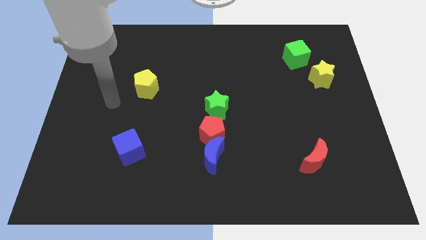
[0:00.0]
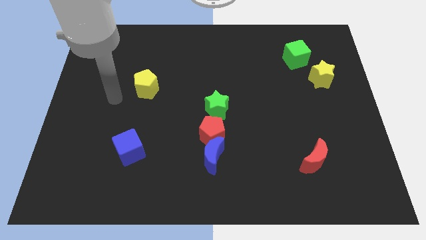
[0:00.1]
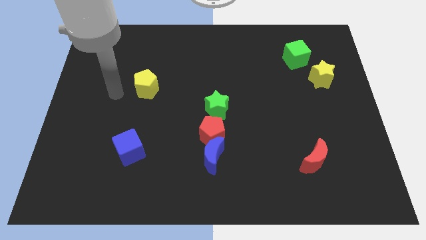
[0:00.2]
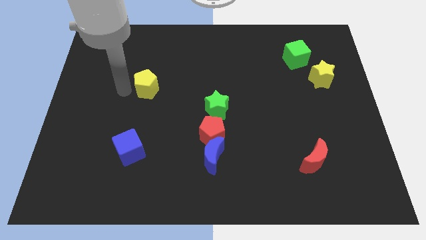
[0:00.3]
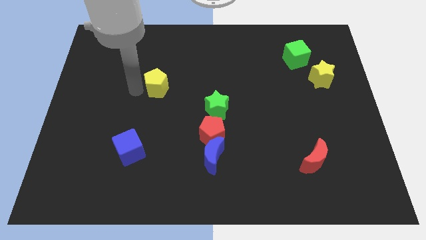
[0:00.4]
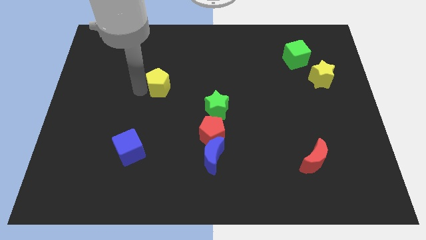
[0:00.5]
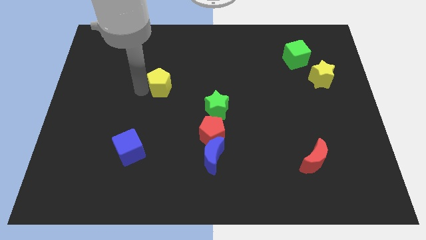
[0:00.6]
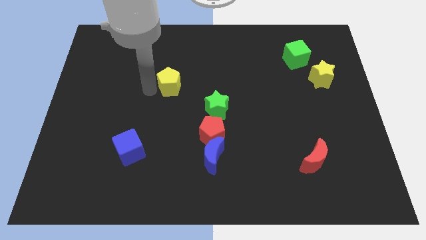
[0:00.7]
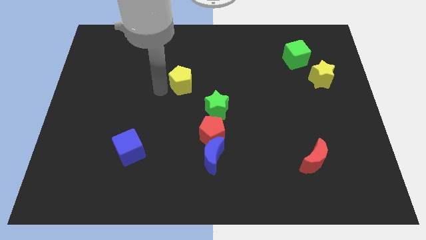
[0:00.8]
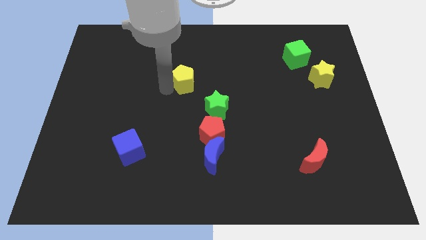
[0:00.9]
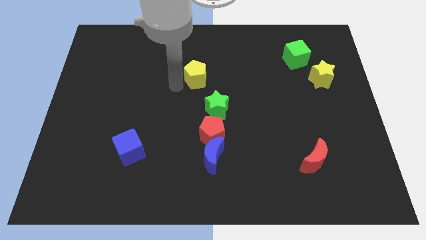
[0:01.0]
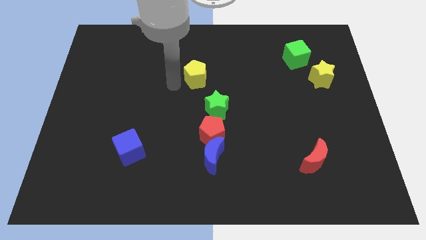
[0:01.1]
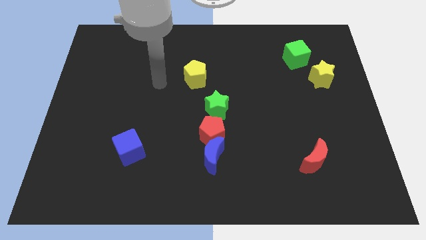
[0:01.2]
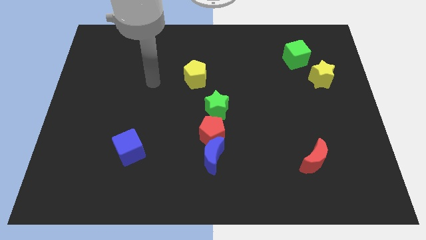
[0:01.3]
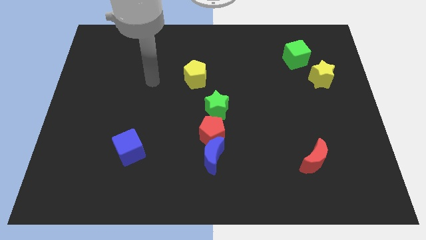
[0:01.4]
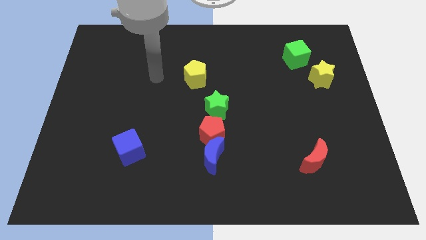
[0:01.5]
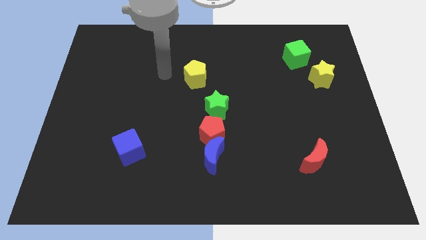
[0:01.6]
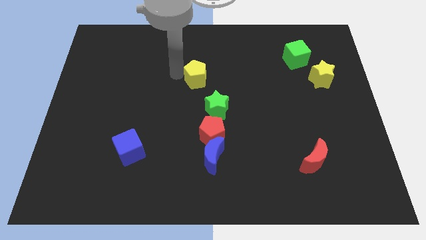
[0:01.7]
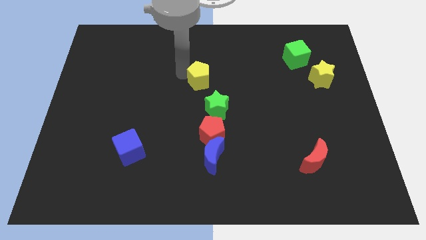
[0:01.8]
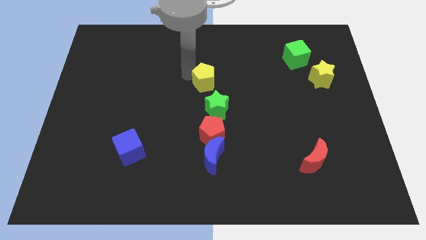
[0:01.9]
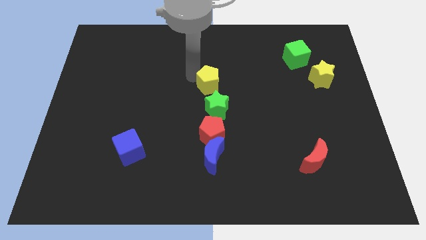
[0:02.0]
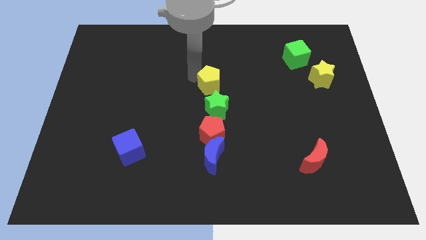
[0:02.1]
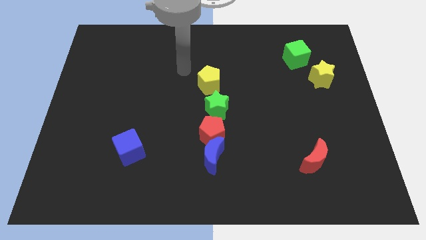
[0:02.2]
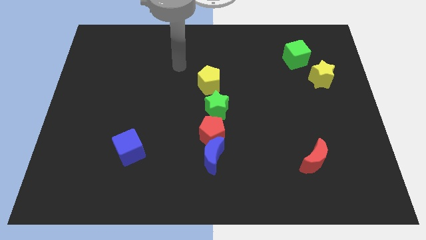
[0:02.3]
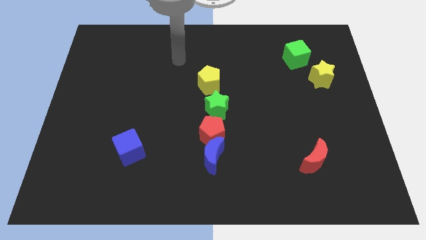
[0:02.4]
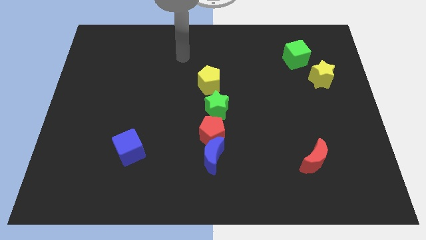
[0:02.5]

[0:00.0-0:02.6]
move the yellow pentagon to the top side of the green star

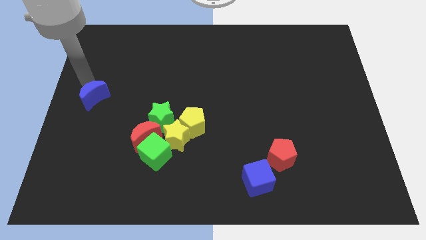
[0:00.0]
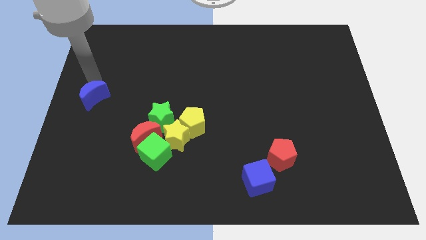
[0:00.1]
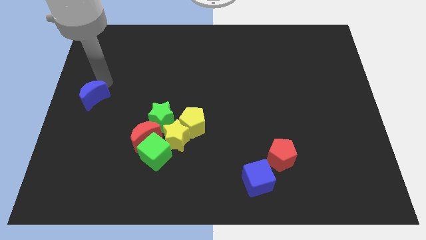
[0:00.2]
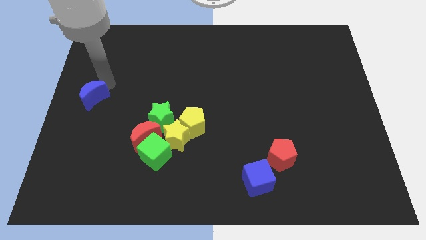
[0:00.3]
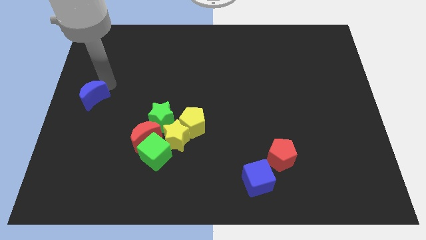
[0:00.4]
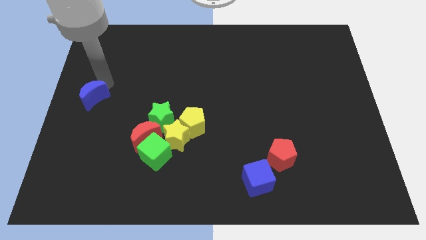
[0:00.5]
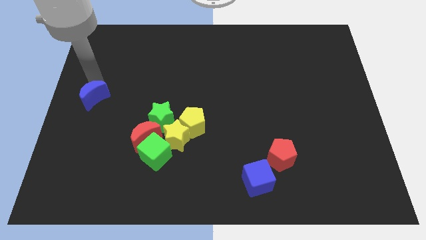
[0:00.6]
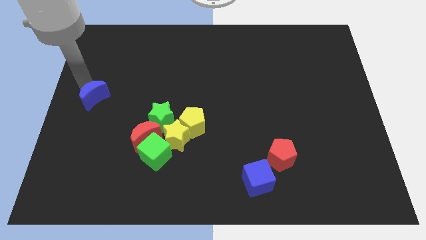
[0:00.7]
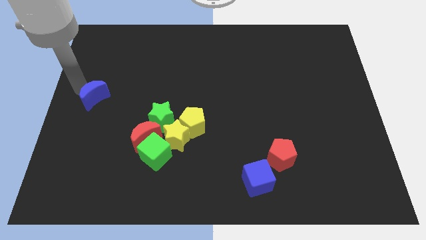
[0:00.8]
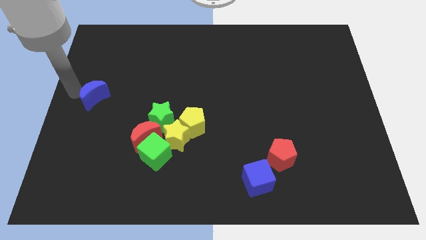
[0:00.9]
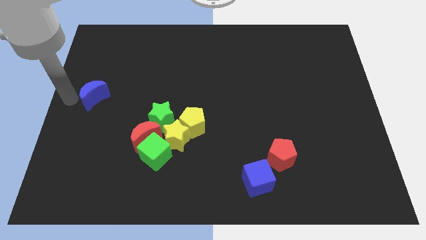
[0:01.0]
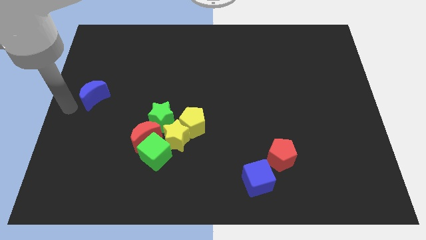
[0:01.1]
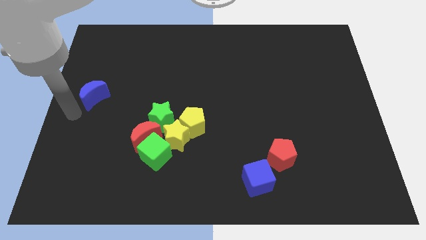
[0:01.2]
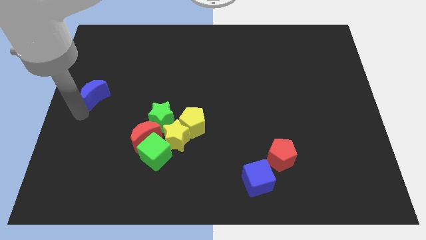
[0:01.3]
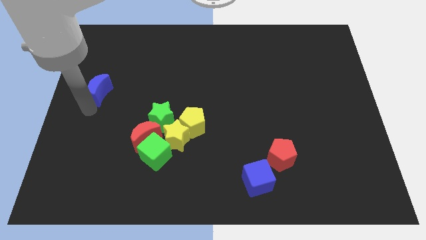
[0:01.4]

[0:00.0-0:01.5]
move the arm into the blue moon

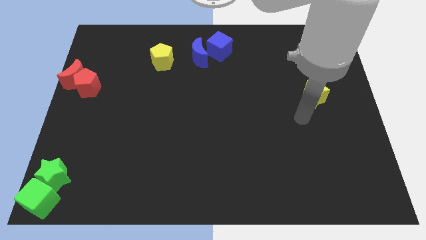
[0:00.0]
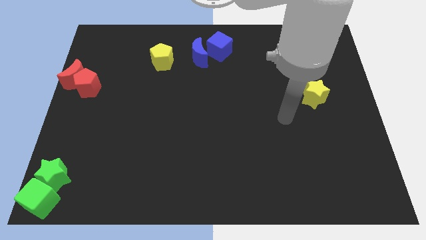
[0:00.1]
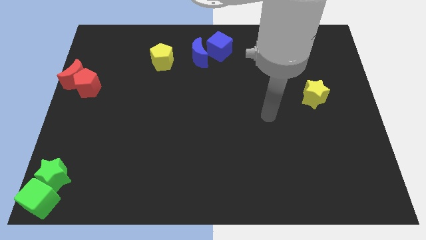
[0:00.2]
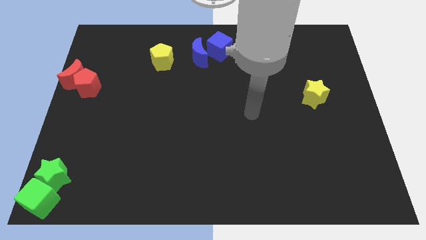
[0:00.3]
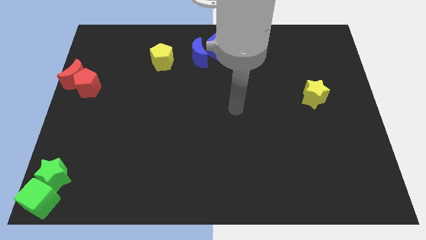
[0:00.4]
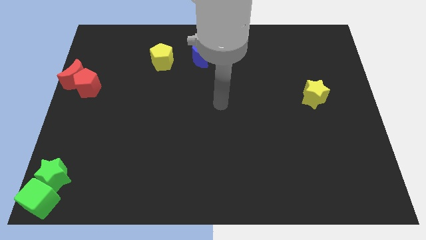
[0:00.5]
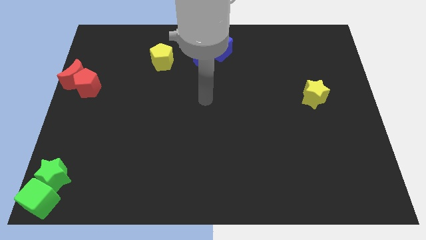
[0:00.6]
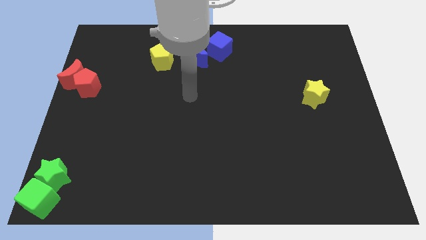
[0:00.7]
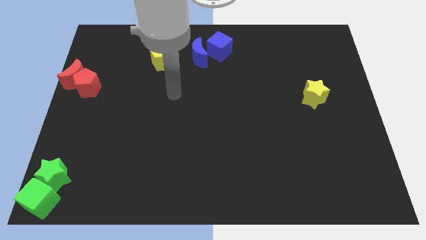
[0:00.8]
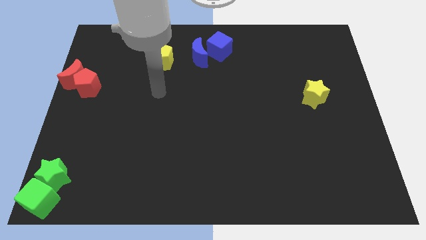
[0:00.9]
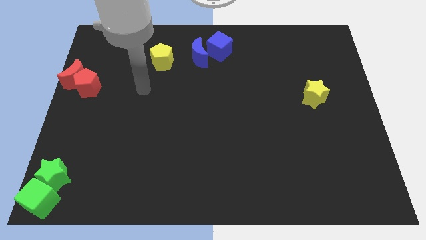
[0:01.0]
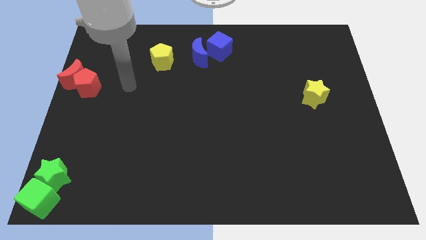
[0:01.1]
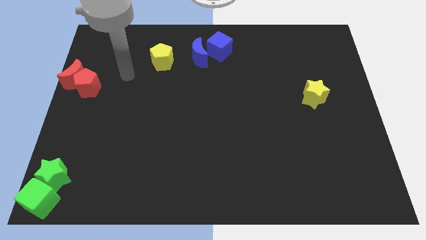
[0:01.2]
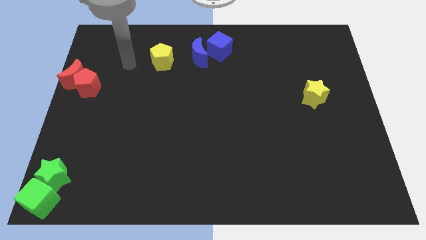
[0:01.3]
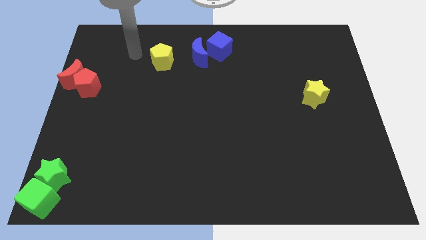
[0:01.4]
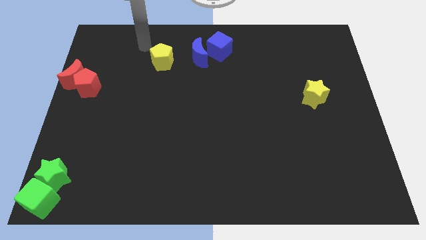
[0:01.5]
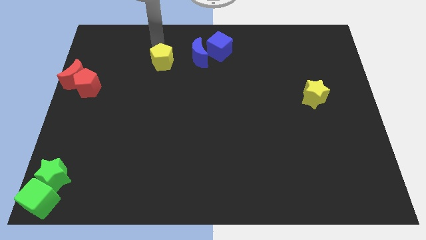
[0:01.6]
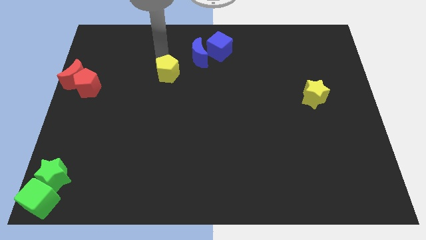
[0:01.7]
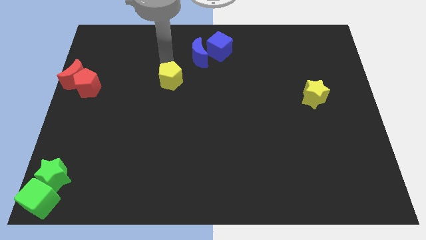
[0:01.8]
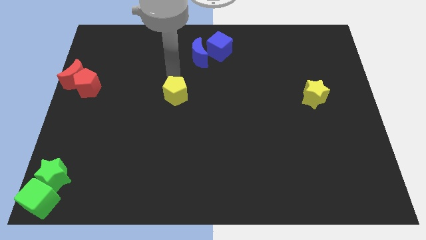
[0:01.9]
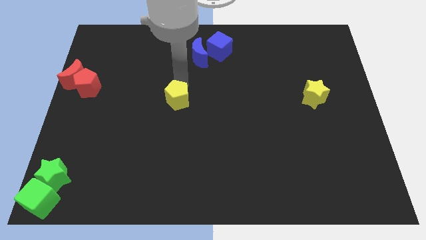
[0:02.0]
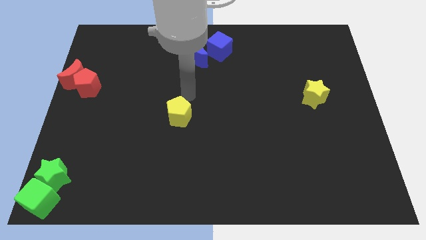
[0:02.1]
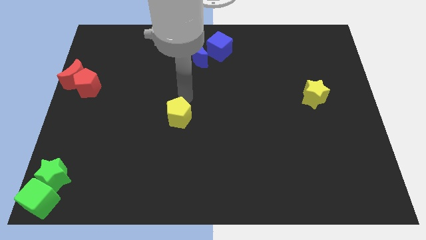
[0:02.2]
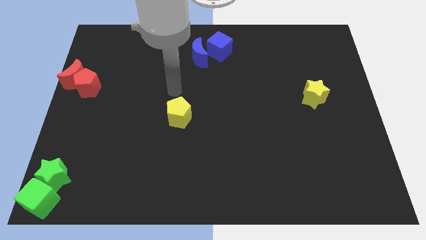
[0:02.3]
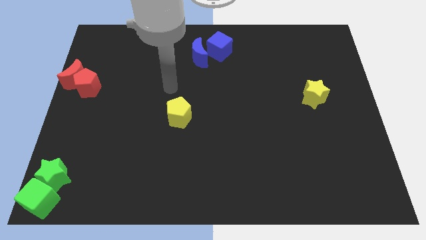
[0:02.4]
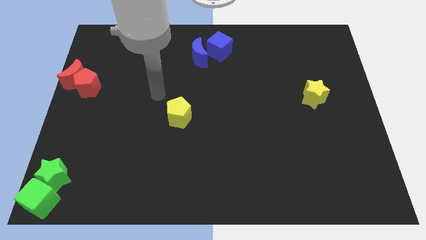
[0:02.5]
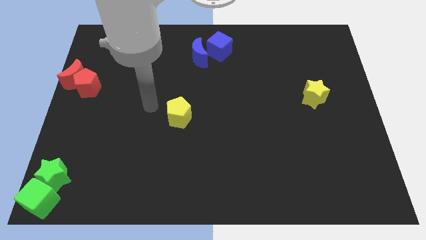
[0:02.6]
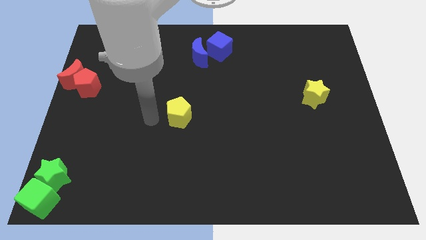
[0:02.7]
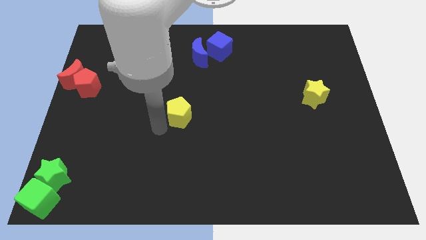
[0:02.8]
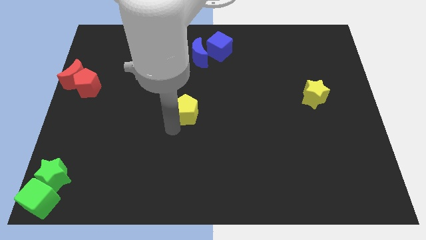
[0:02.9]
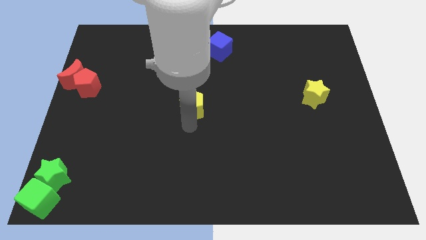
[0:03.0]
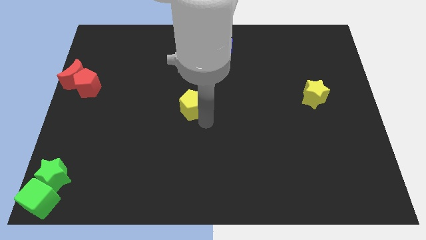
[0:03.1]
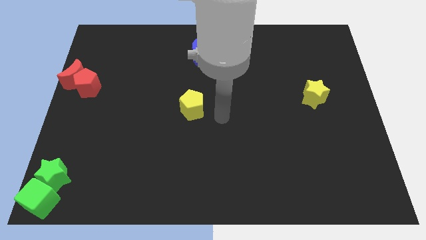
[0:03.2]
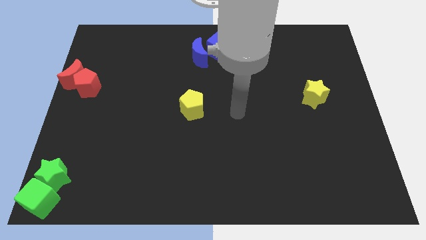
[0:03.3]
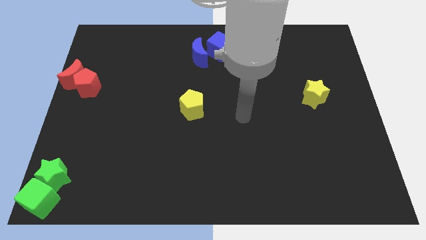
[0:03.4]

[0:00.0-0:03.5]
push the yellow pentagon to the center of the board

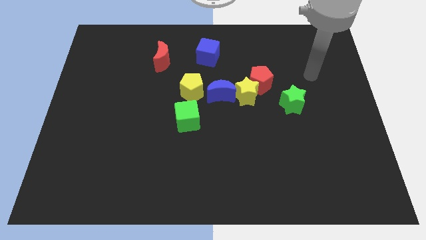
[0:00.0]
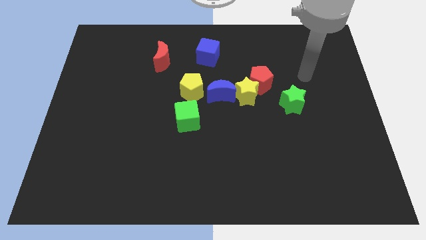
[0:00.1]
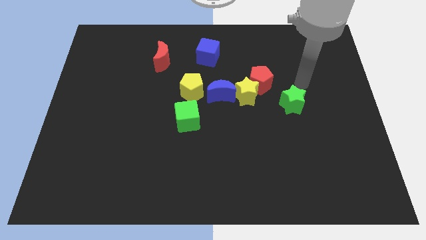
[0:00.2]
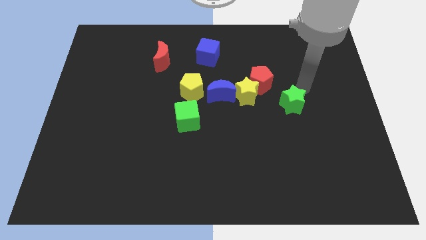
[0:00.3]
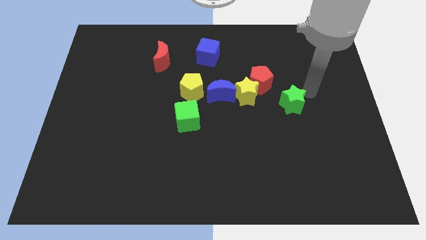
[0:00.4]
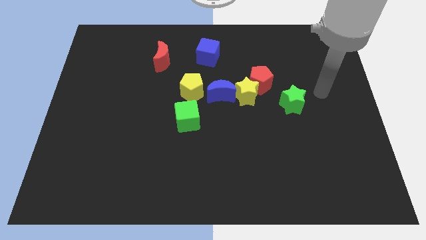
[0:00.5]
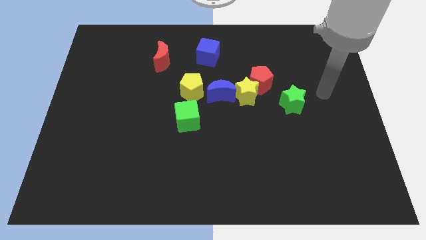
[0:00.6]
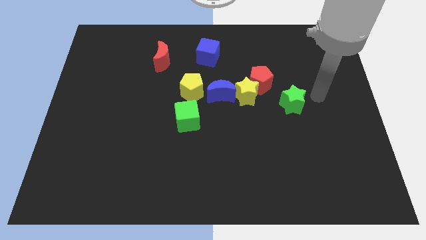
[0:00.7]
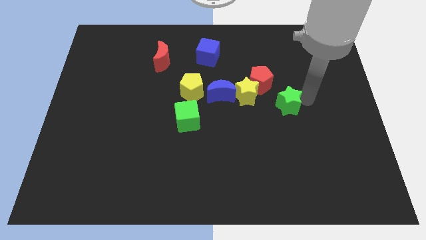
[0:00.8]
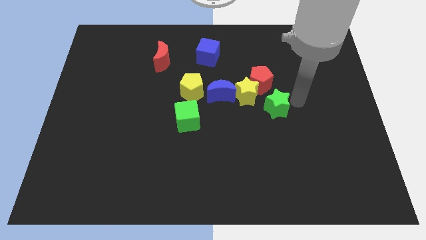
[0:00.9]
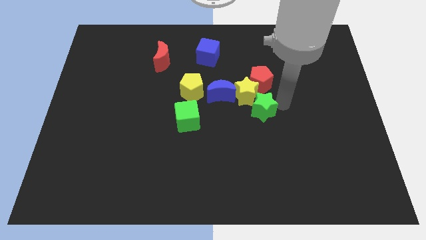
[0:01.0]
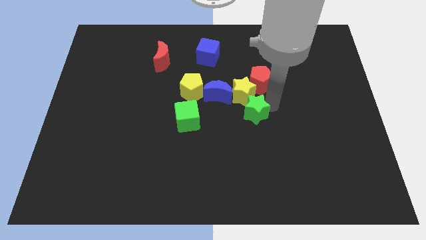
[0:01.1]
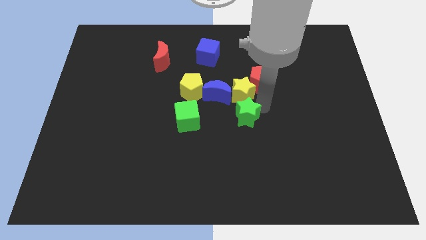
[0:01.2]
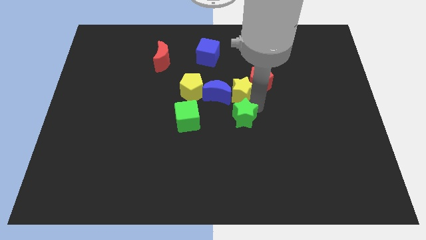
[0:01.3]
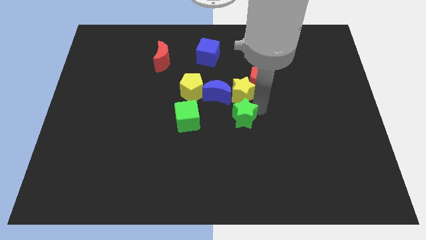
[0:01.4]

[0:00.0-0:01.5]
place the green star right to the green cube

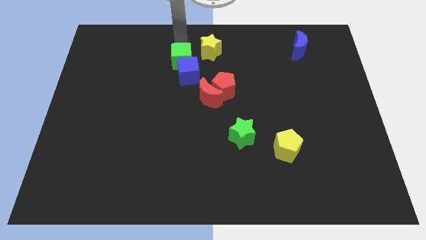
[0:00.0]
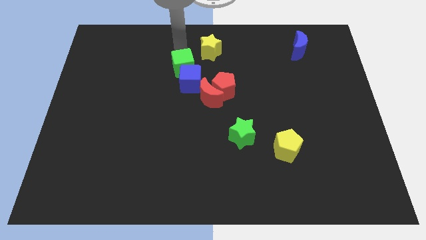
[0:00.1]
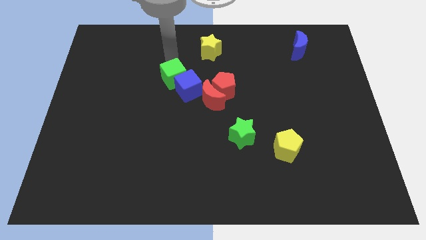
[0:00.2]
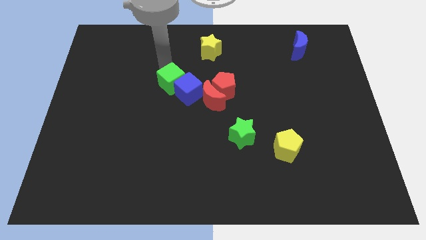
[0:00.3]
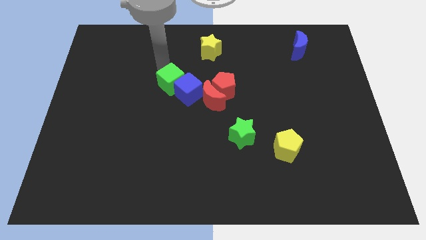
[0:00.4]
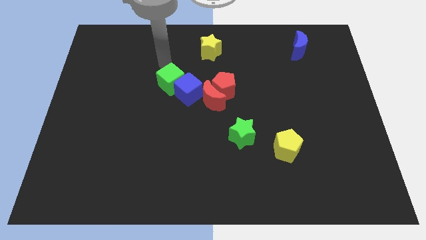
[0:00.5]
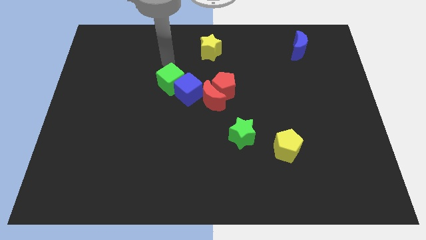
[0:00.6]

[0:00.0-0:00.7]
move the green cube slightly downwards
